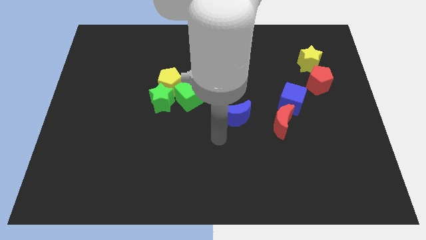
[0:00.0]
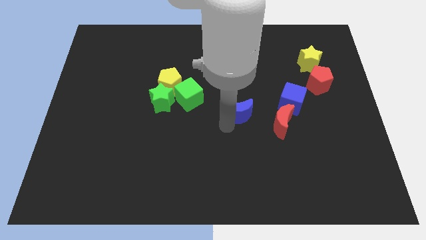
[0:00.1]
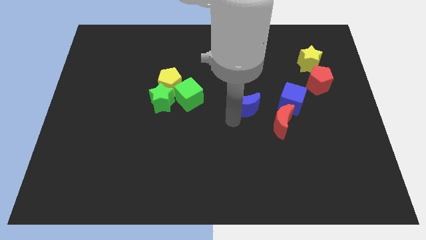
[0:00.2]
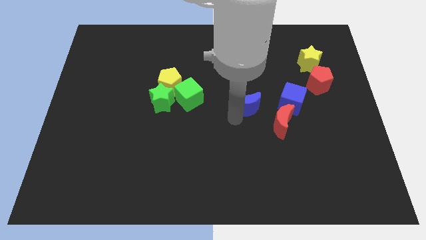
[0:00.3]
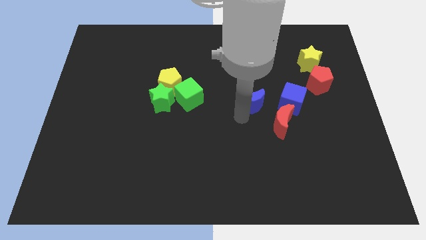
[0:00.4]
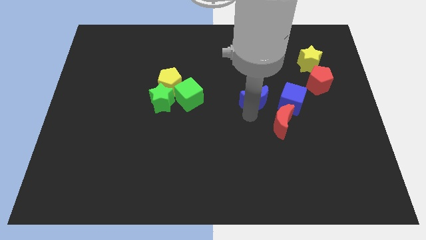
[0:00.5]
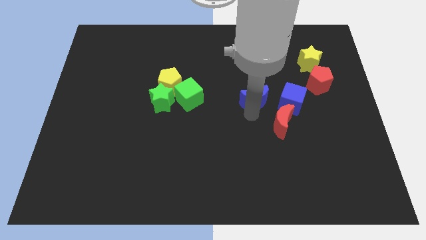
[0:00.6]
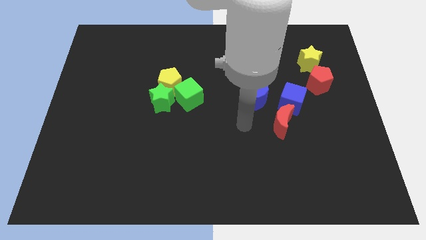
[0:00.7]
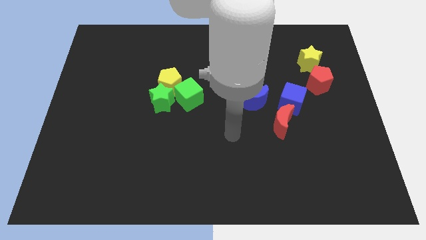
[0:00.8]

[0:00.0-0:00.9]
move the blue moon slightly up

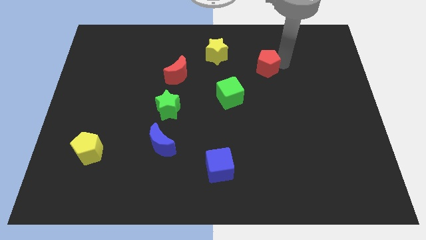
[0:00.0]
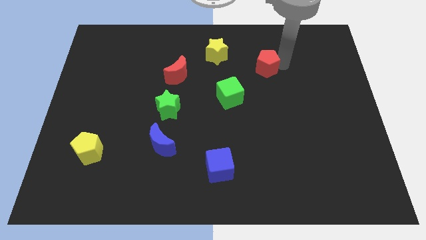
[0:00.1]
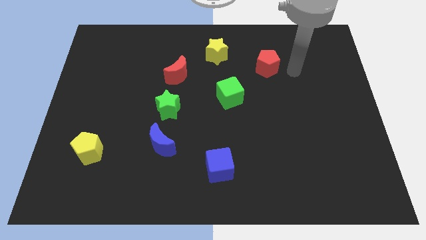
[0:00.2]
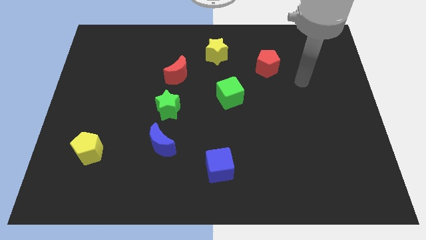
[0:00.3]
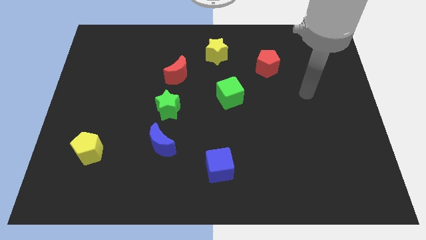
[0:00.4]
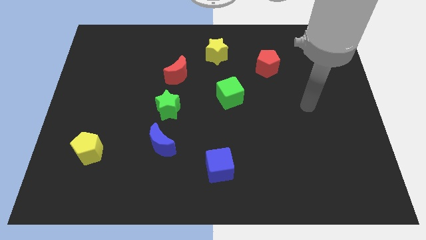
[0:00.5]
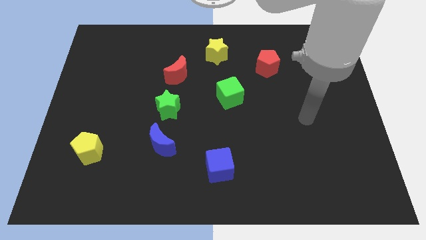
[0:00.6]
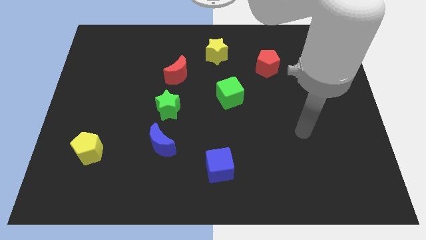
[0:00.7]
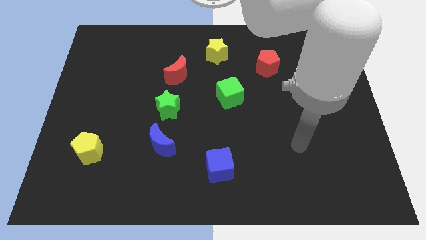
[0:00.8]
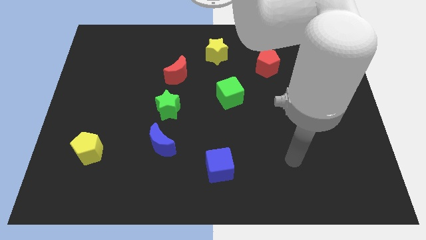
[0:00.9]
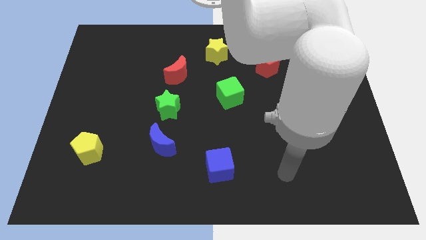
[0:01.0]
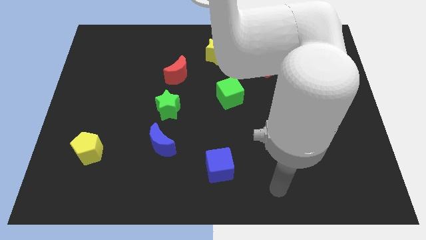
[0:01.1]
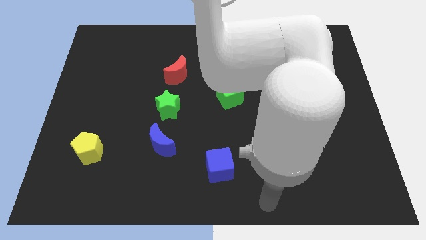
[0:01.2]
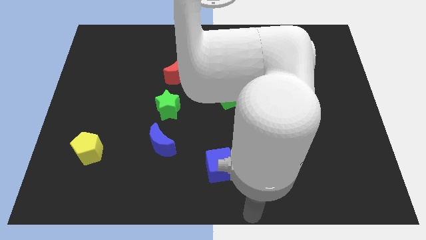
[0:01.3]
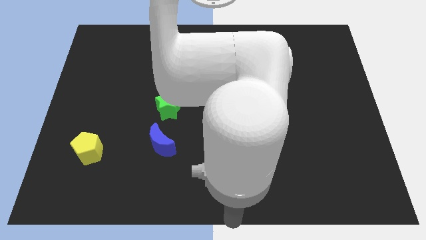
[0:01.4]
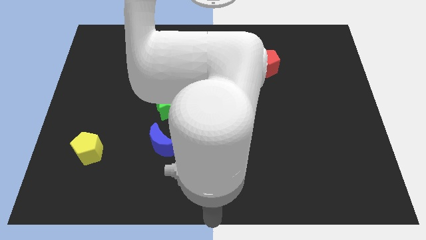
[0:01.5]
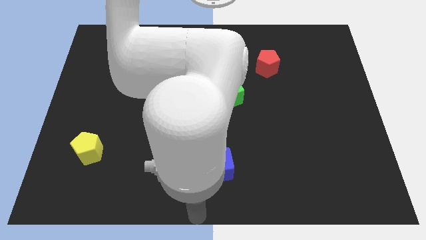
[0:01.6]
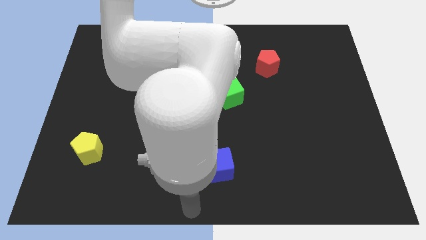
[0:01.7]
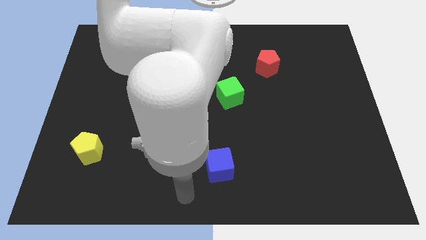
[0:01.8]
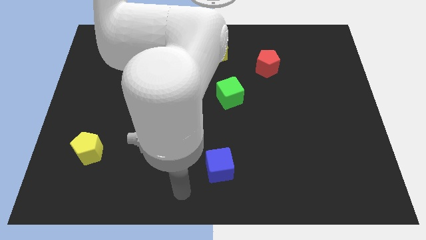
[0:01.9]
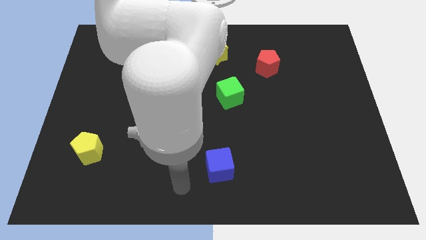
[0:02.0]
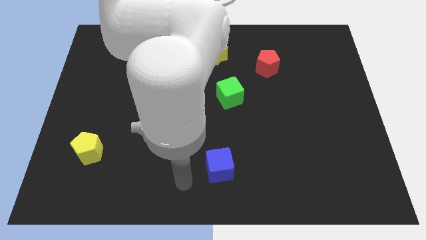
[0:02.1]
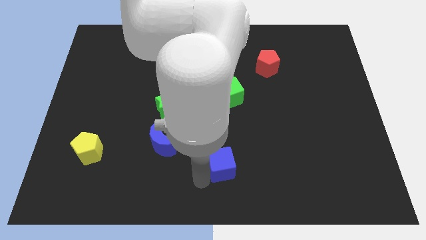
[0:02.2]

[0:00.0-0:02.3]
move your arm to the left of the blue cube

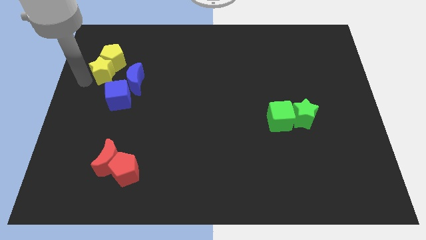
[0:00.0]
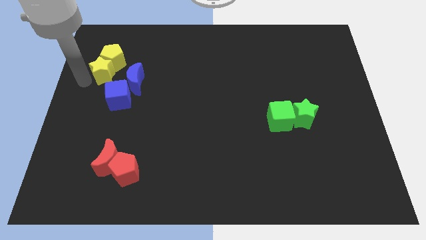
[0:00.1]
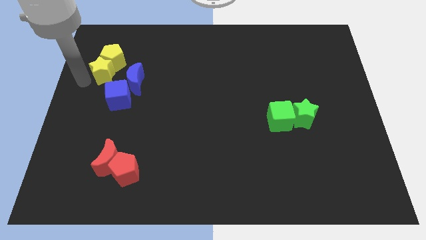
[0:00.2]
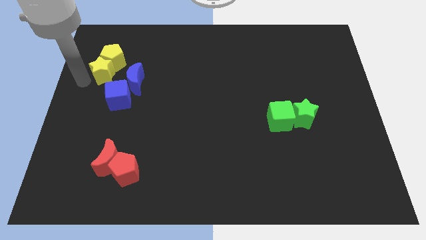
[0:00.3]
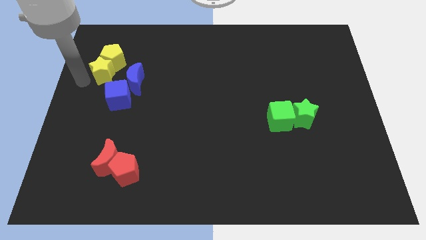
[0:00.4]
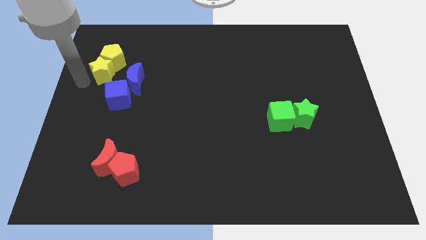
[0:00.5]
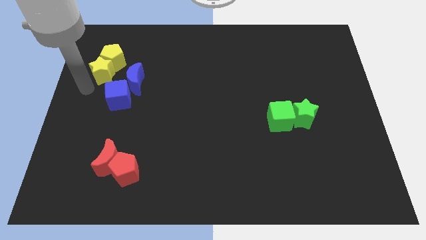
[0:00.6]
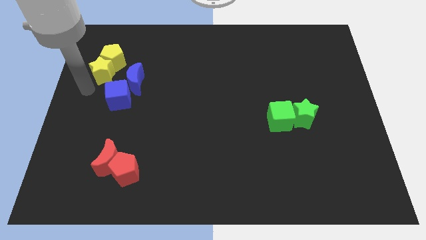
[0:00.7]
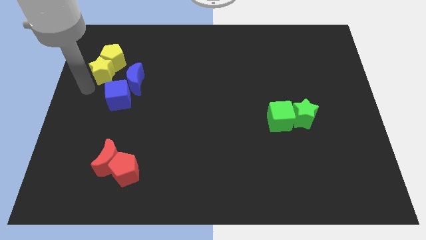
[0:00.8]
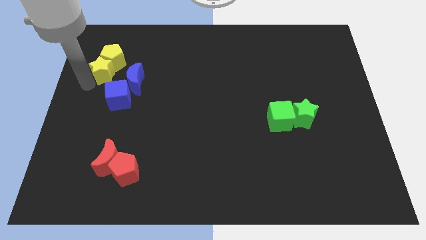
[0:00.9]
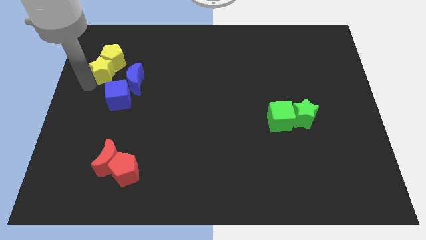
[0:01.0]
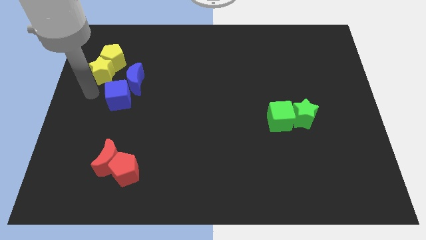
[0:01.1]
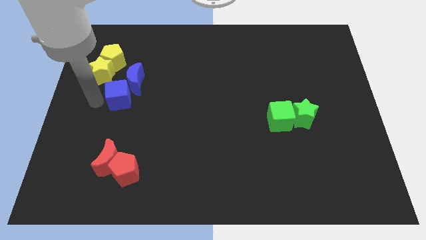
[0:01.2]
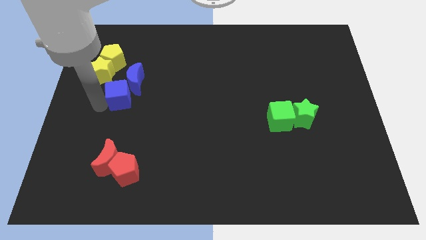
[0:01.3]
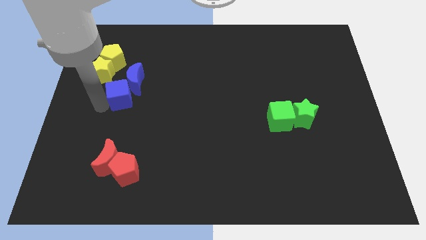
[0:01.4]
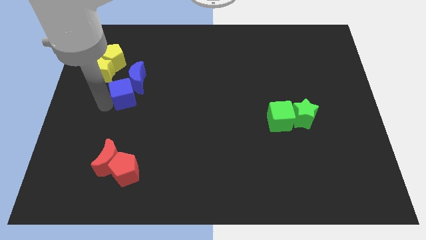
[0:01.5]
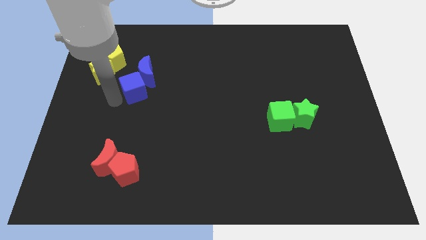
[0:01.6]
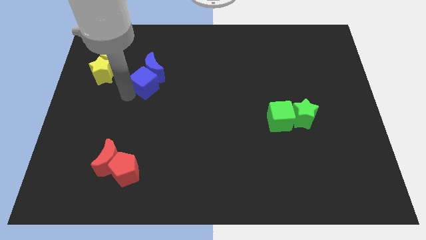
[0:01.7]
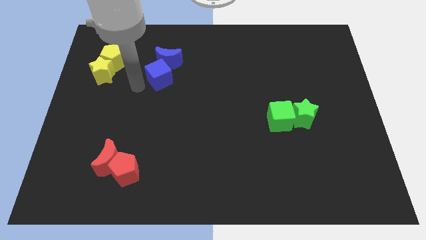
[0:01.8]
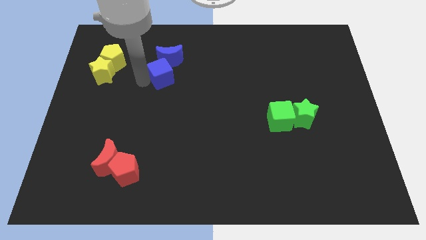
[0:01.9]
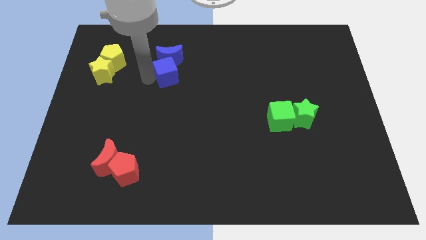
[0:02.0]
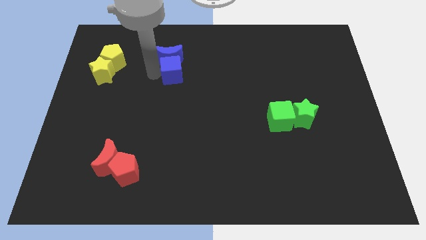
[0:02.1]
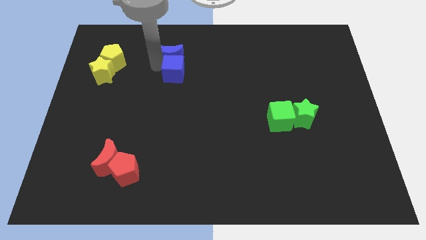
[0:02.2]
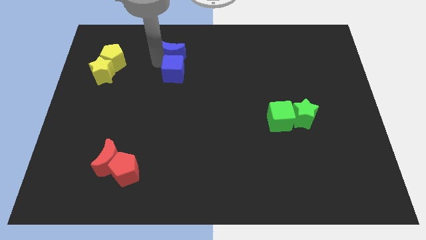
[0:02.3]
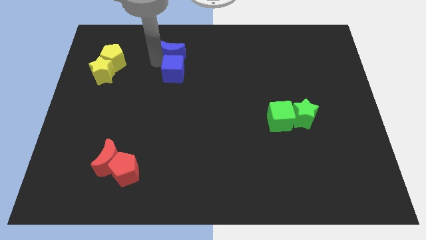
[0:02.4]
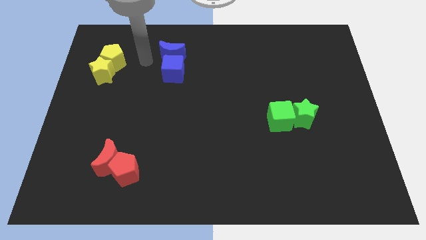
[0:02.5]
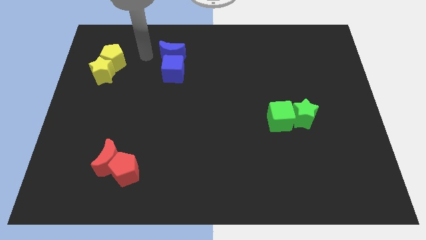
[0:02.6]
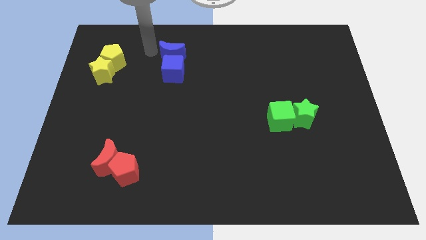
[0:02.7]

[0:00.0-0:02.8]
push the blue crescent right to the yellow blocks using the blue cube

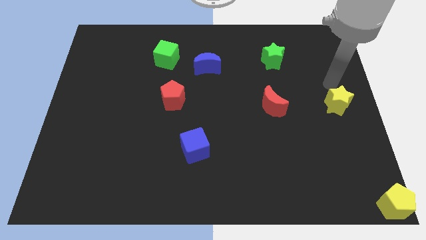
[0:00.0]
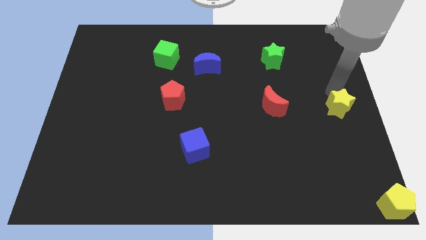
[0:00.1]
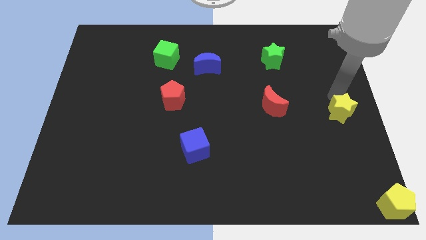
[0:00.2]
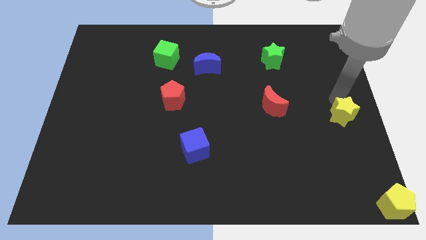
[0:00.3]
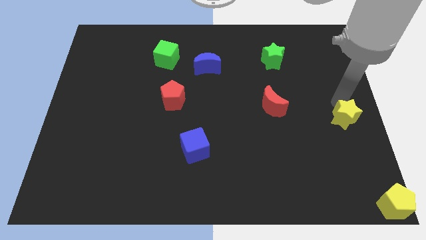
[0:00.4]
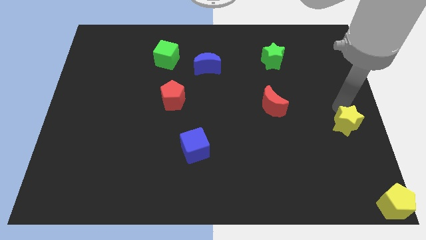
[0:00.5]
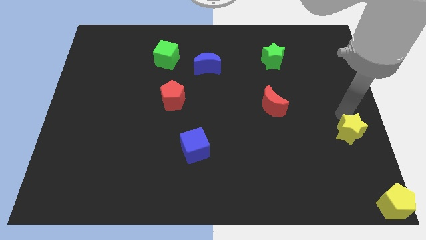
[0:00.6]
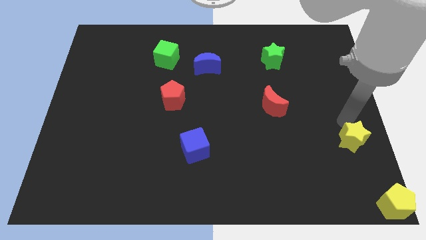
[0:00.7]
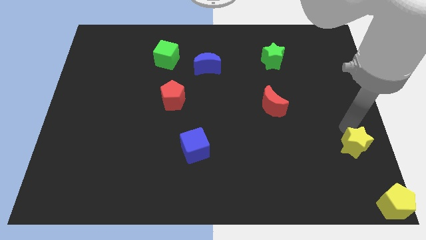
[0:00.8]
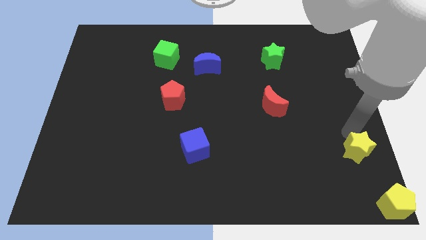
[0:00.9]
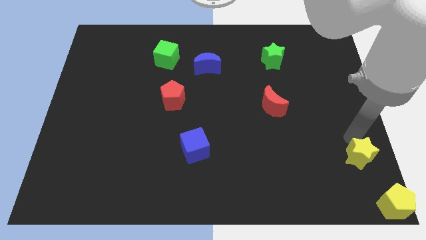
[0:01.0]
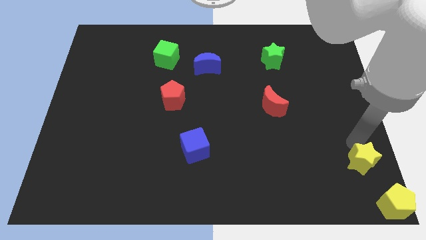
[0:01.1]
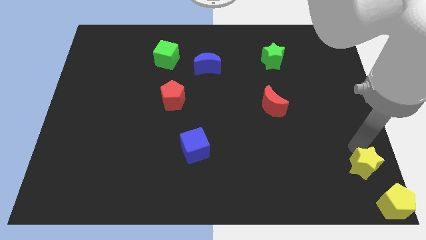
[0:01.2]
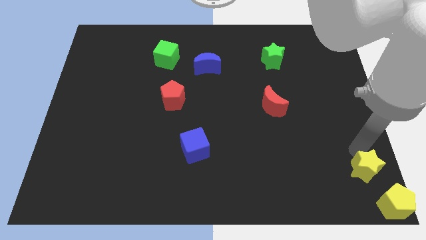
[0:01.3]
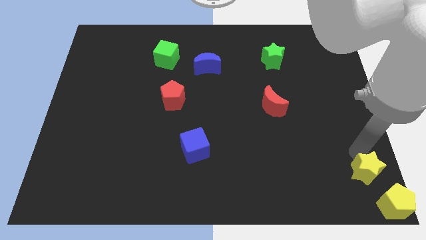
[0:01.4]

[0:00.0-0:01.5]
push the yellow star towards the bottom right corner of the board

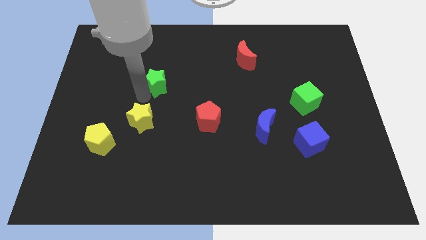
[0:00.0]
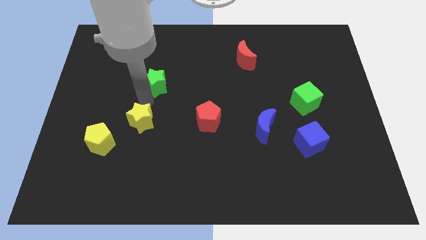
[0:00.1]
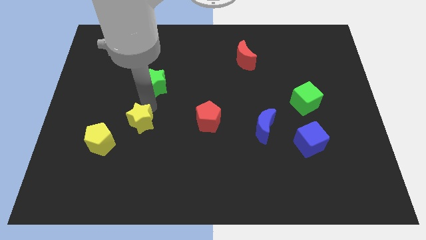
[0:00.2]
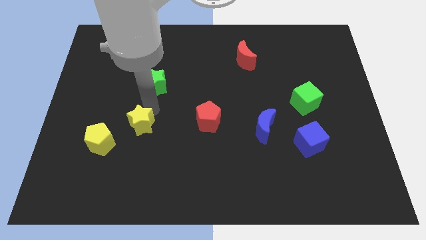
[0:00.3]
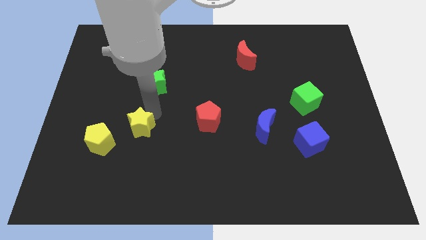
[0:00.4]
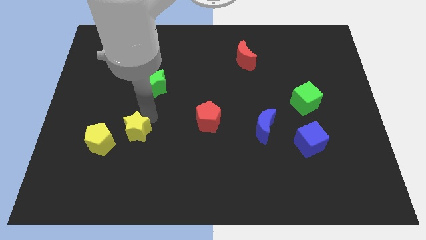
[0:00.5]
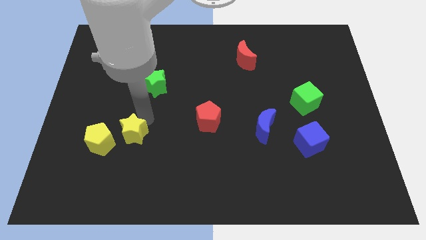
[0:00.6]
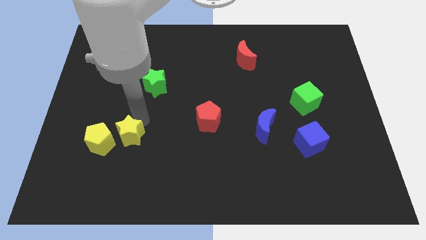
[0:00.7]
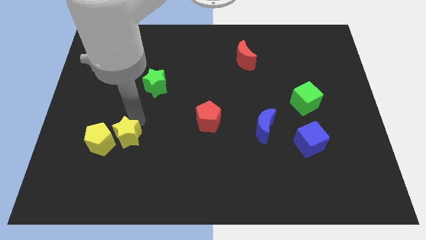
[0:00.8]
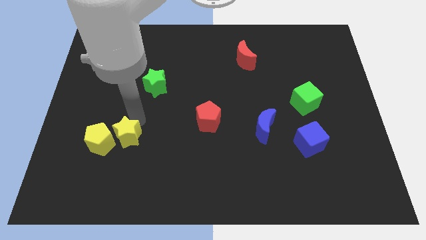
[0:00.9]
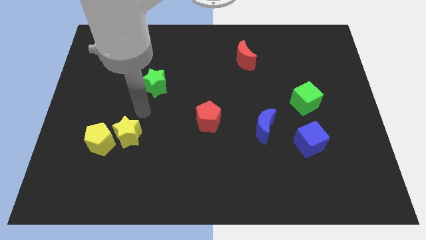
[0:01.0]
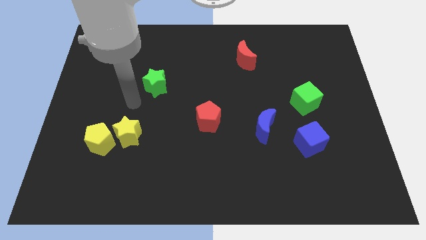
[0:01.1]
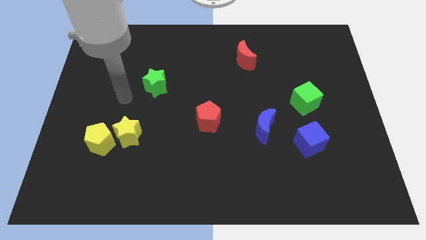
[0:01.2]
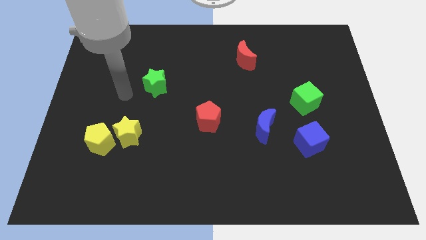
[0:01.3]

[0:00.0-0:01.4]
put the yellow star to the right side of yellow pentagon
